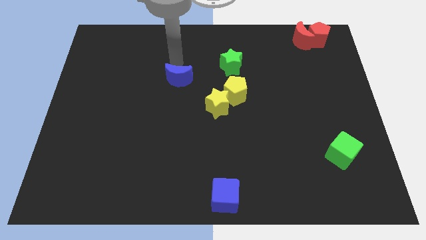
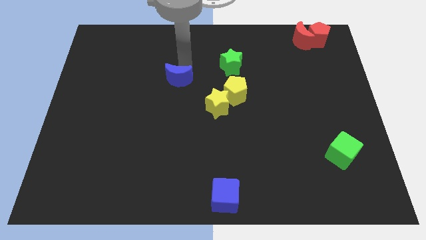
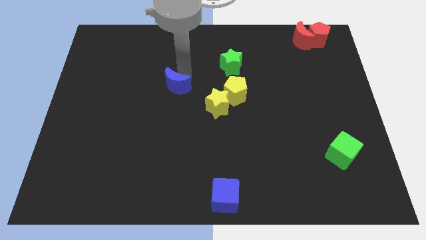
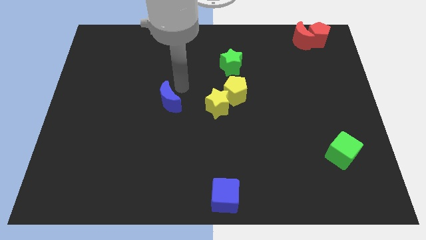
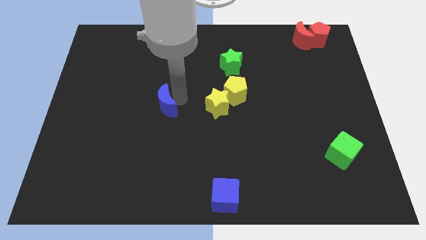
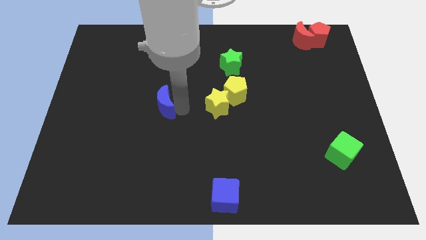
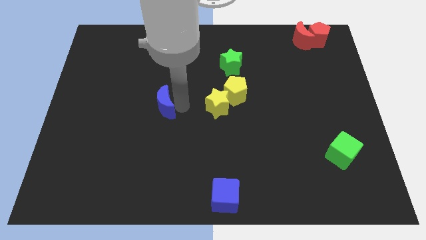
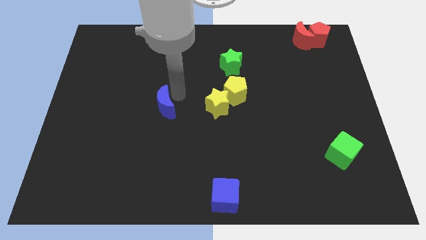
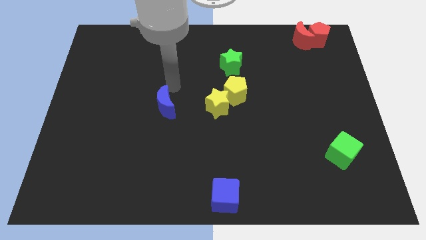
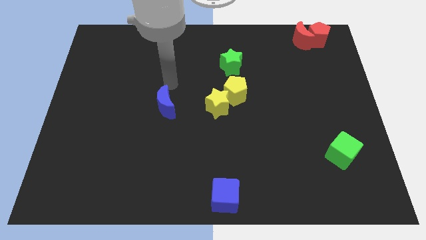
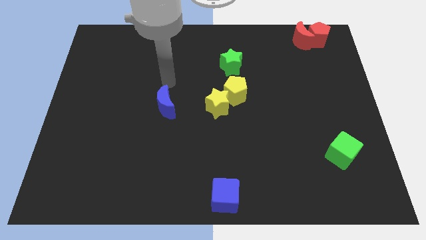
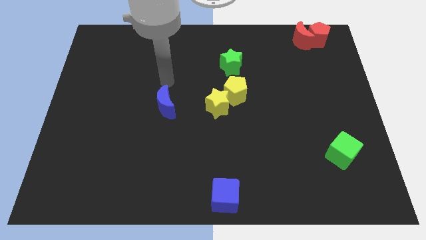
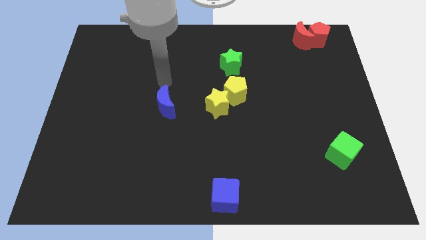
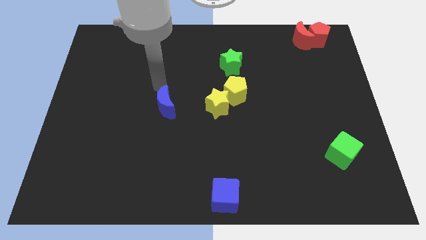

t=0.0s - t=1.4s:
place the blue moon left to the yellow star

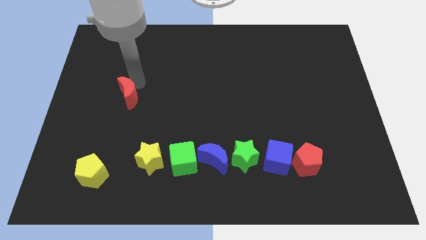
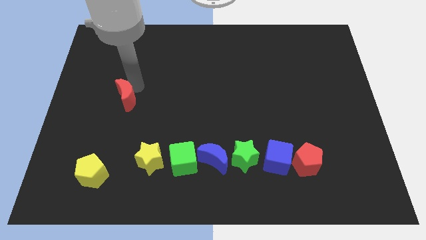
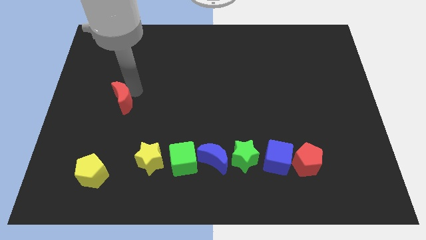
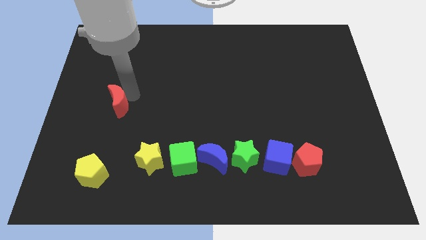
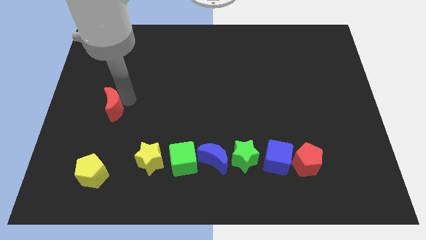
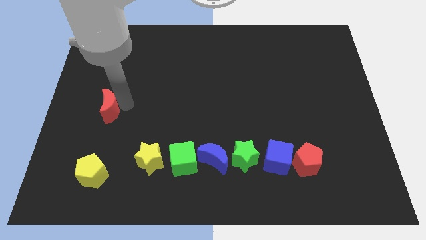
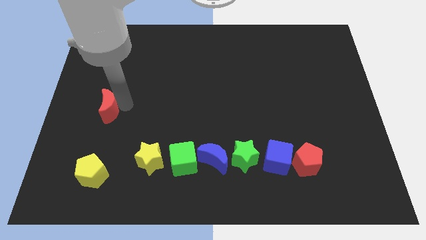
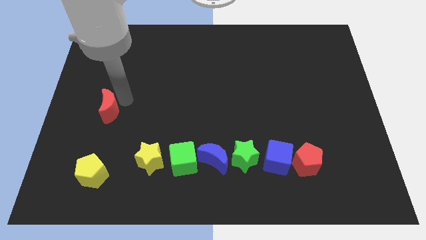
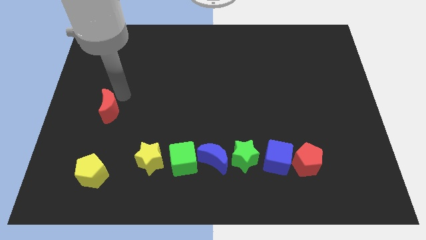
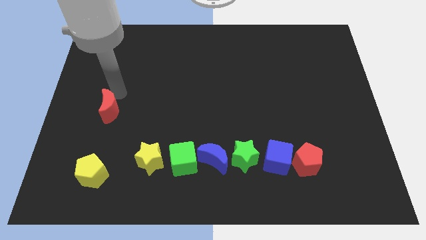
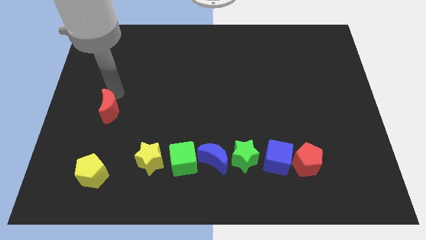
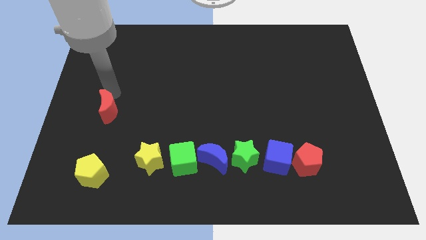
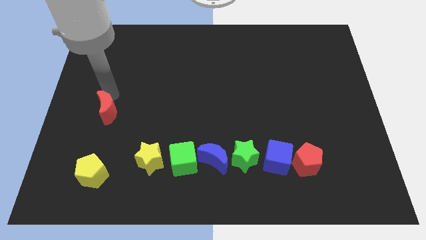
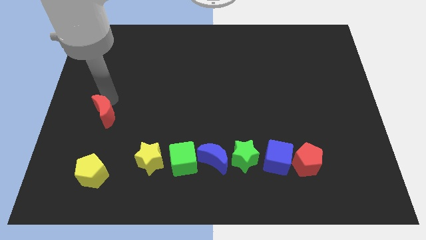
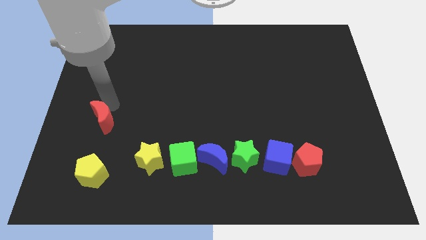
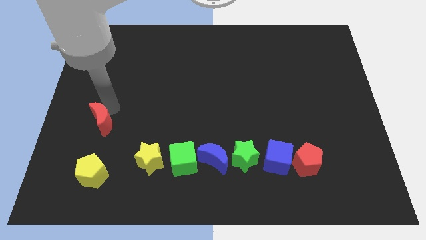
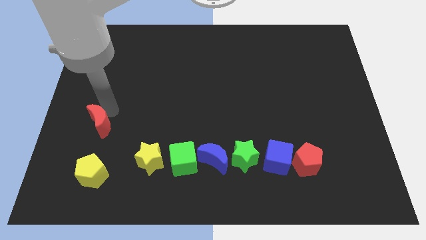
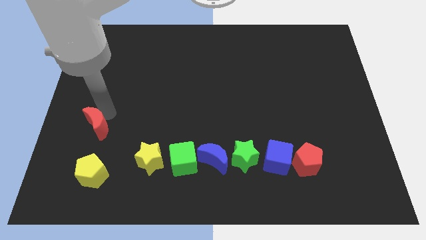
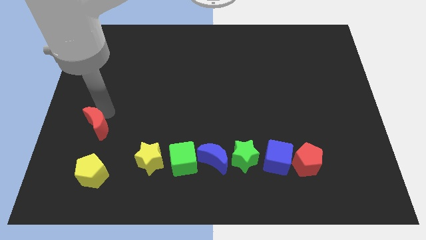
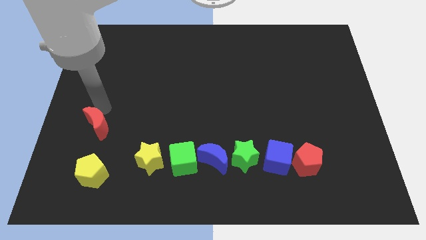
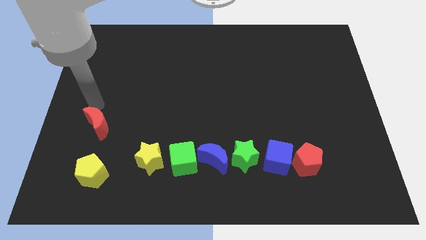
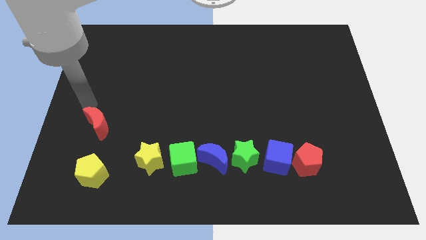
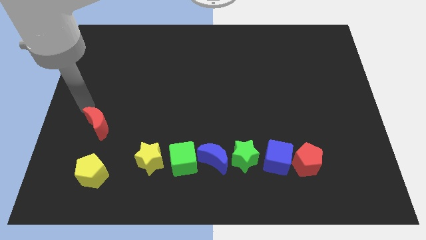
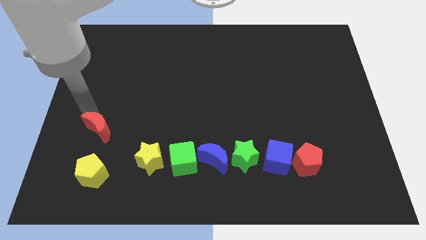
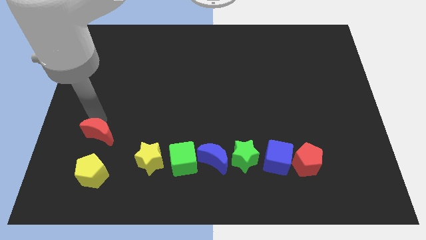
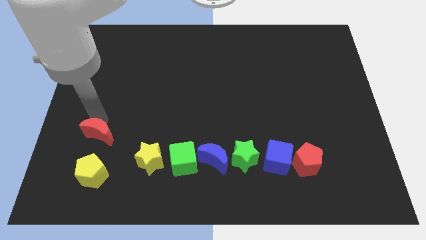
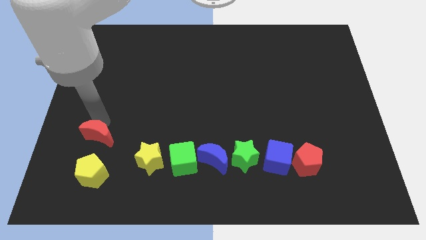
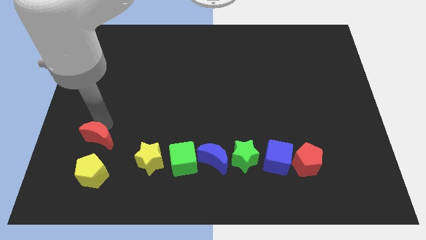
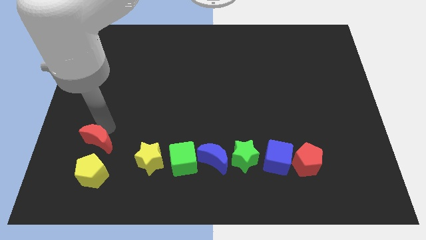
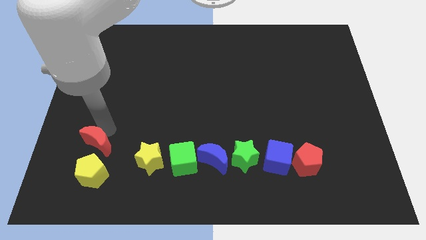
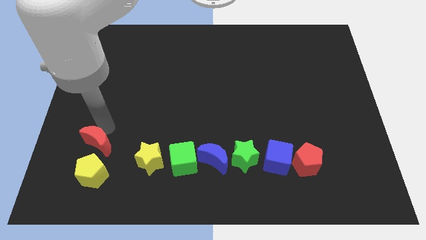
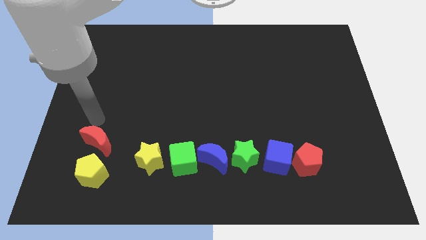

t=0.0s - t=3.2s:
put the red crescent vertically above the yellow pentagon

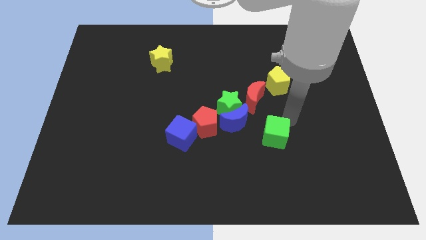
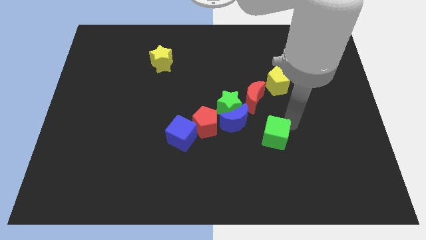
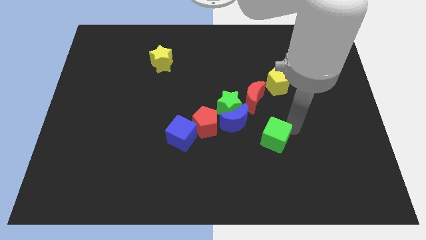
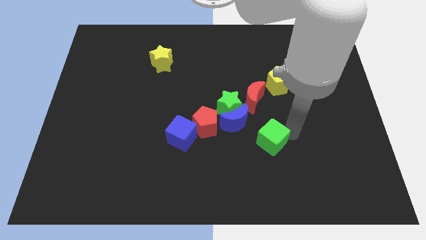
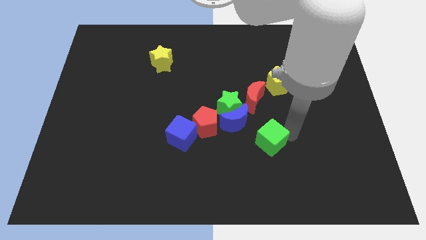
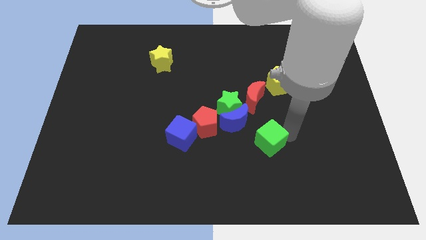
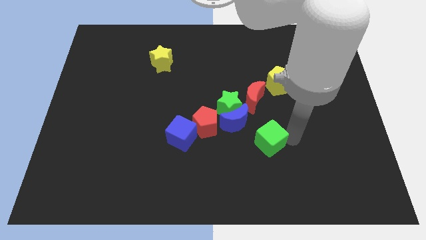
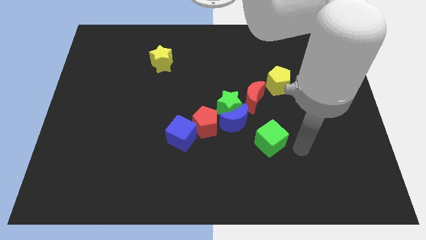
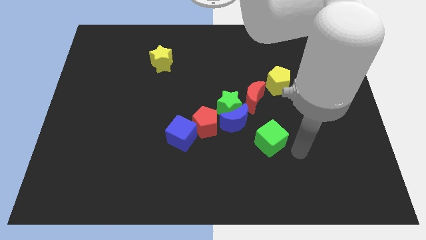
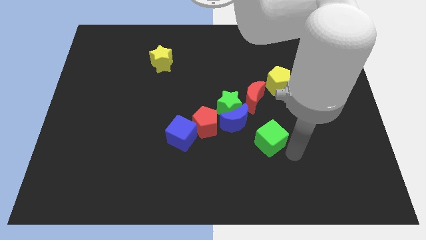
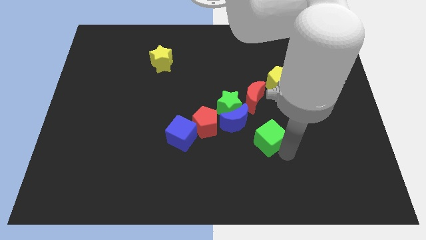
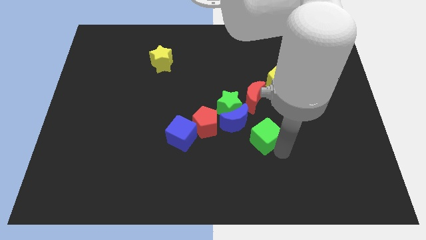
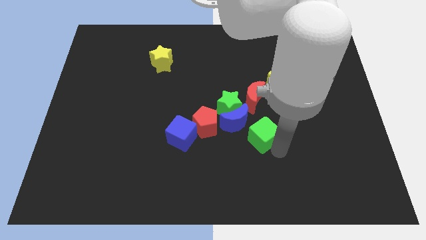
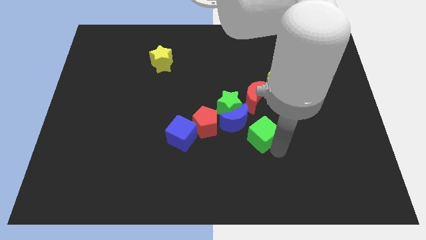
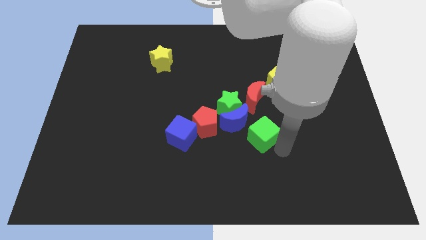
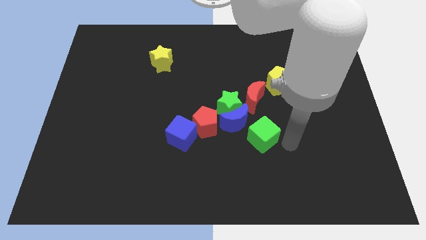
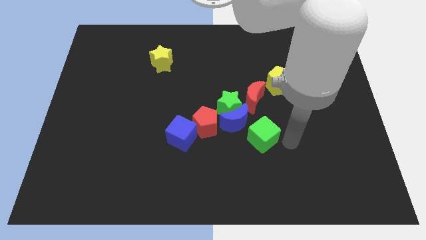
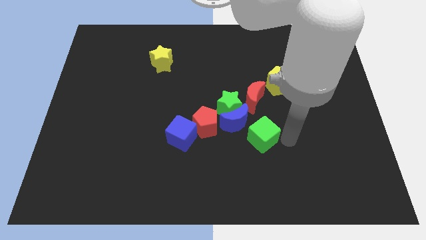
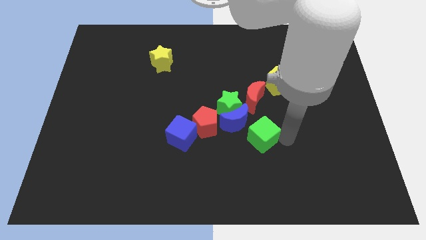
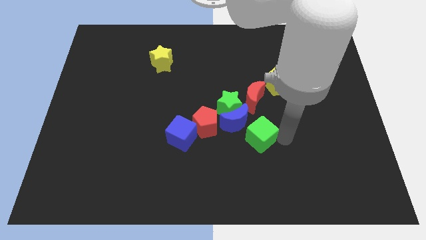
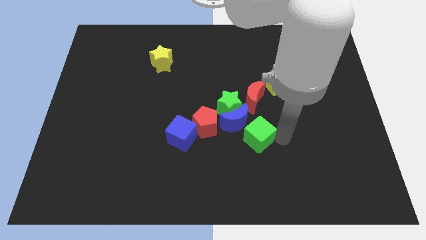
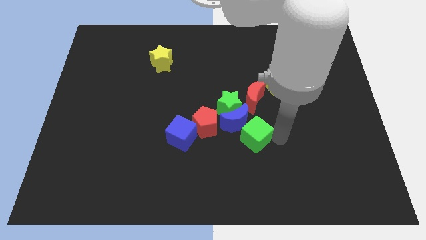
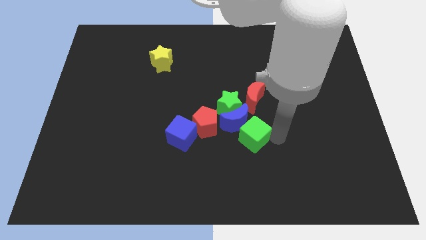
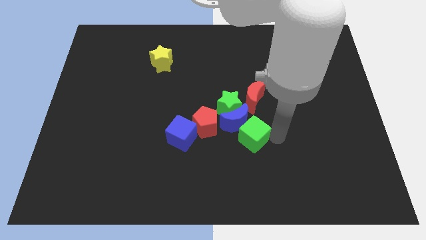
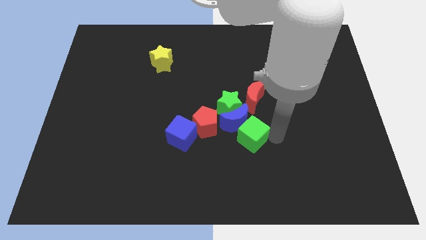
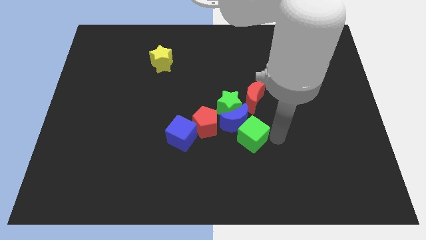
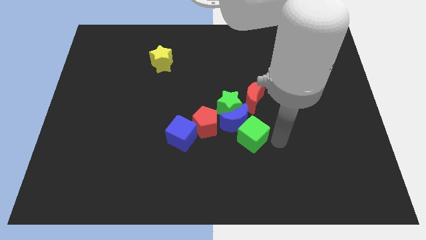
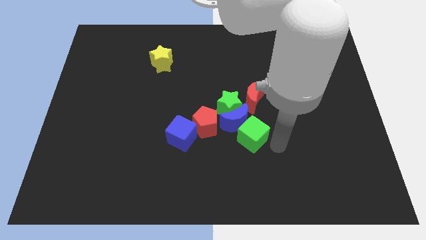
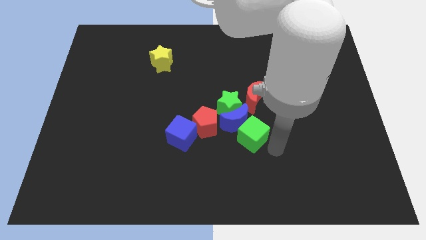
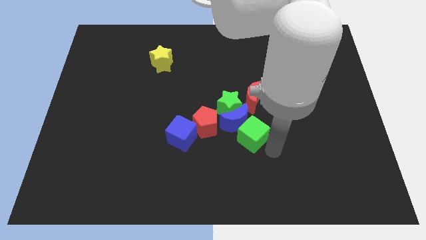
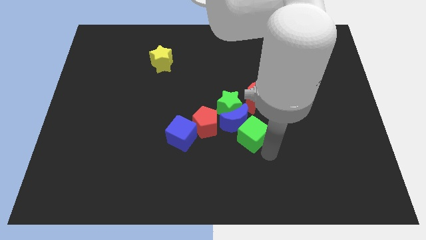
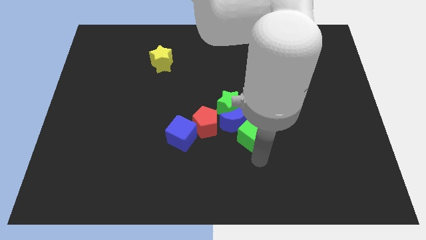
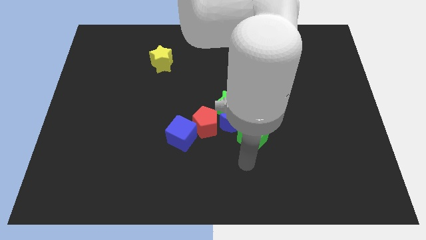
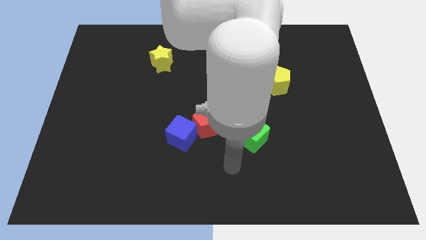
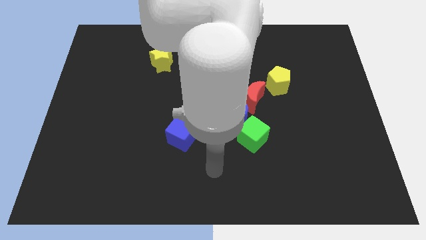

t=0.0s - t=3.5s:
place the green cube at the bottom right side of blue moon

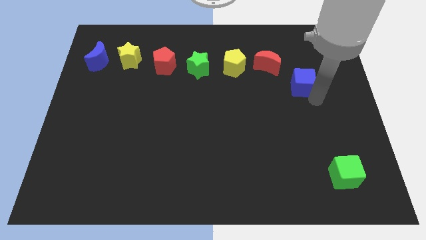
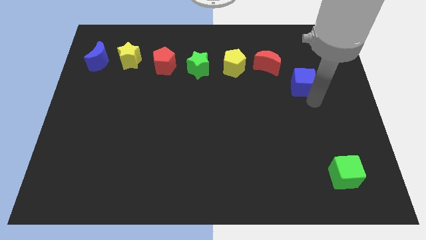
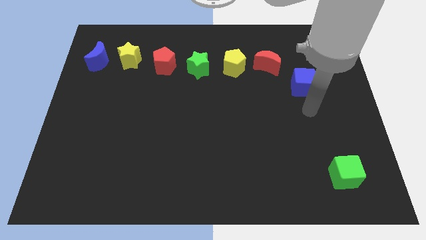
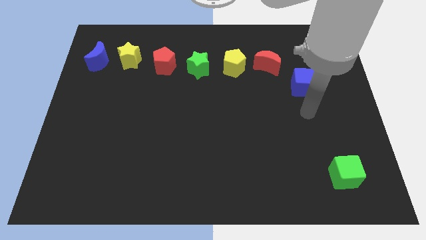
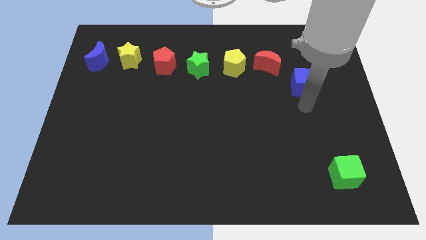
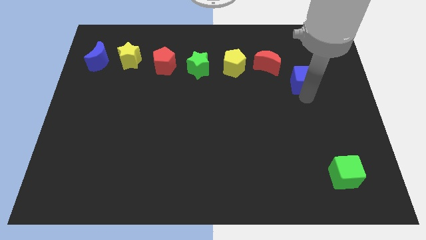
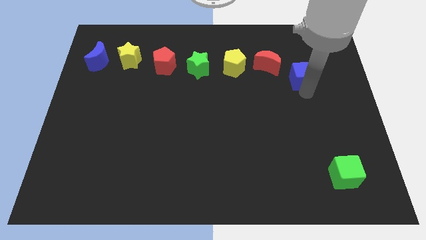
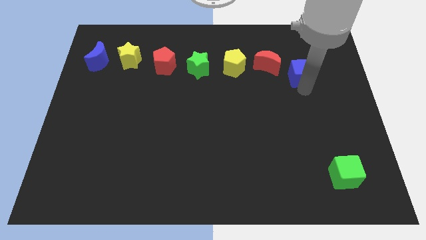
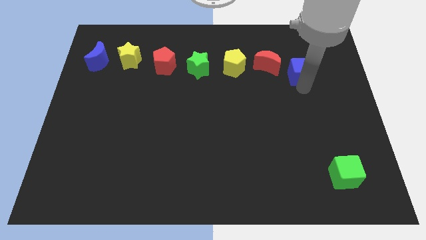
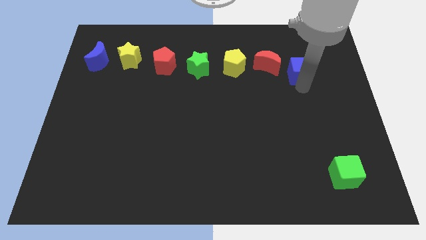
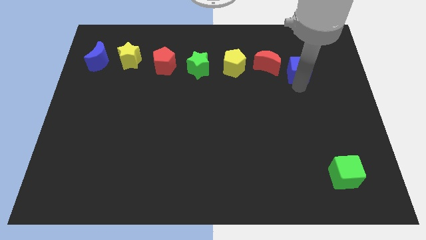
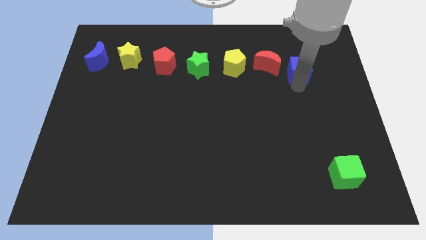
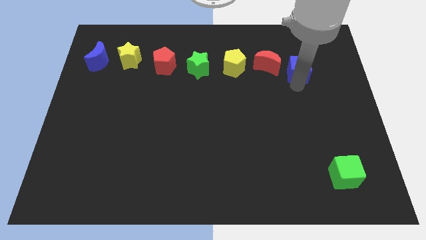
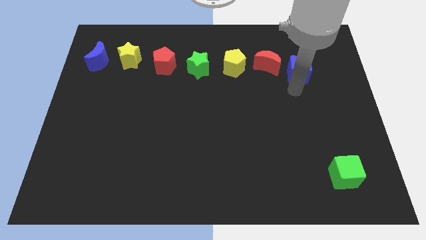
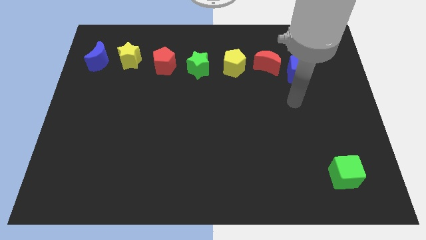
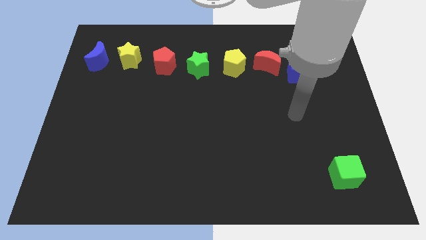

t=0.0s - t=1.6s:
push the blue cube to the right side of the red moon
